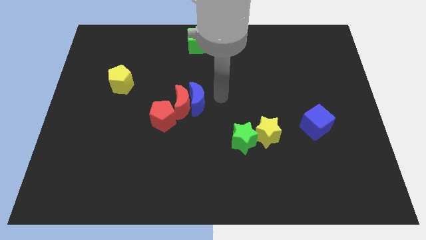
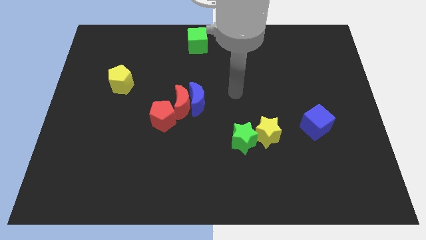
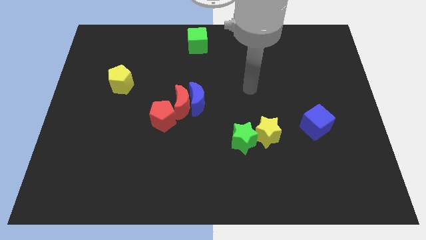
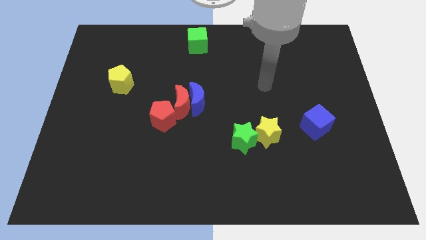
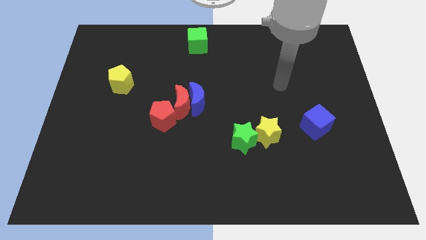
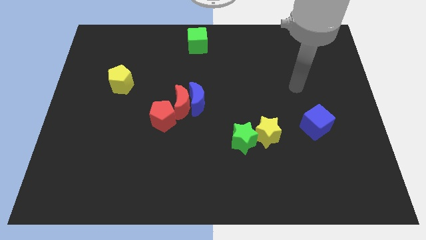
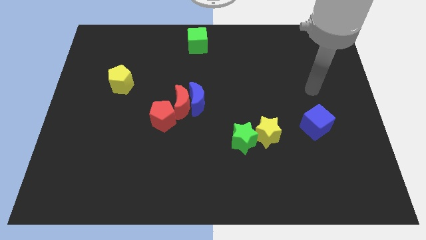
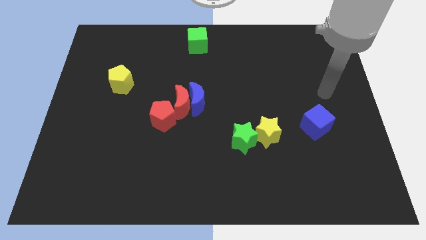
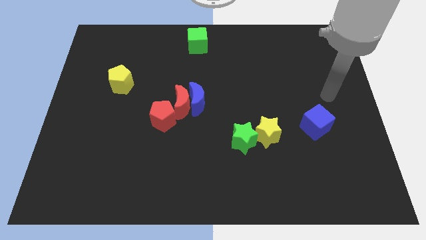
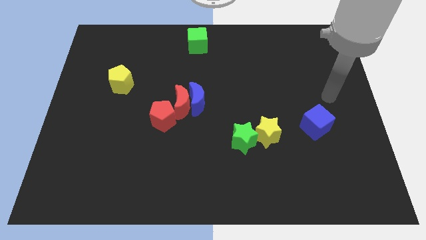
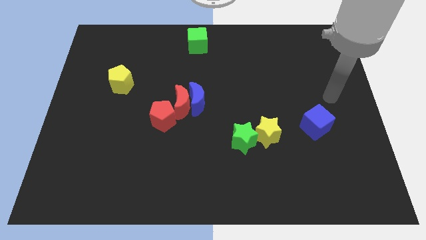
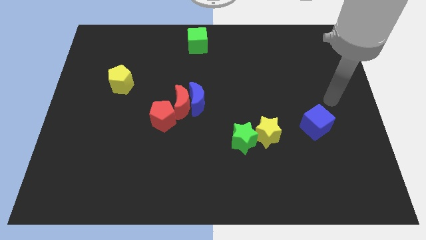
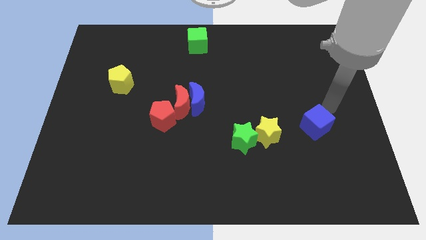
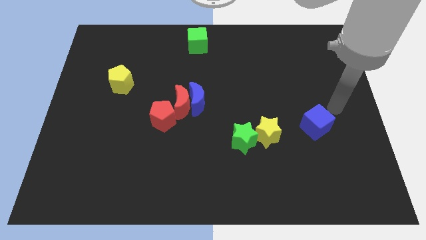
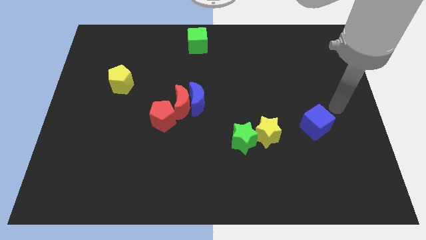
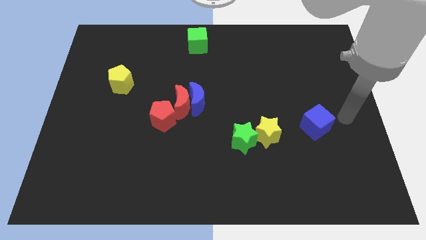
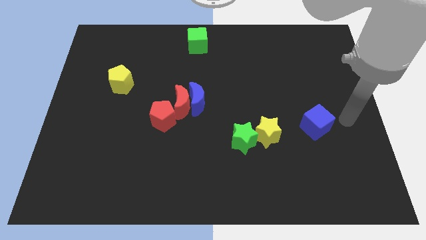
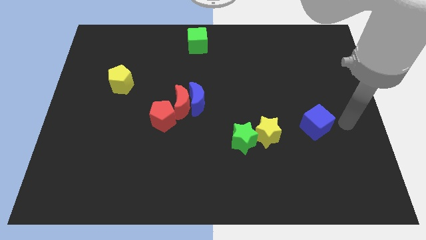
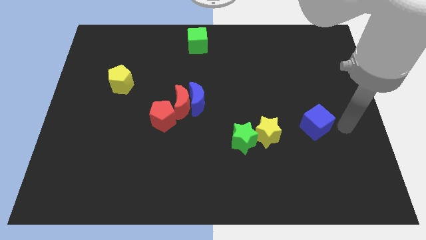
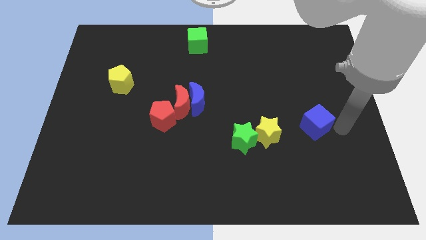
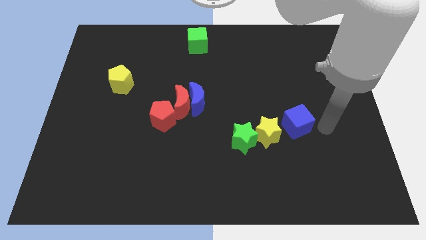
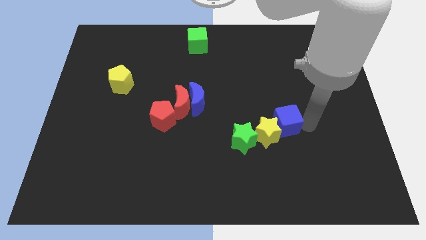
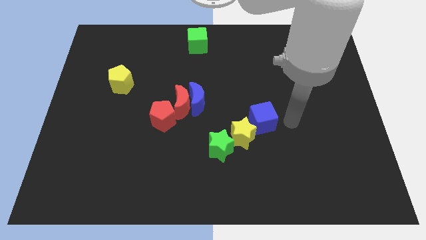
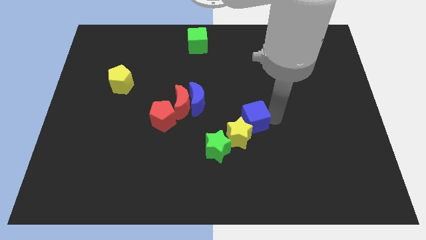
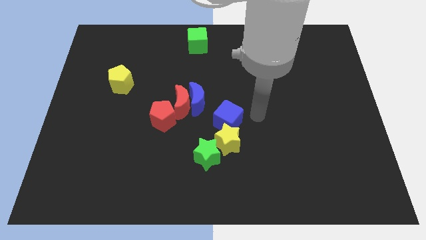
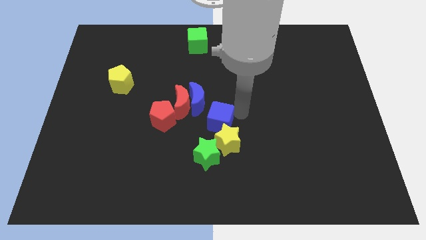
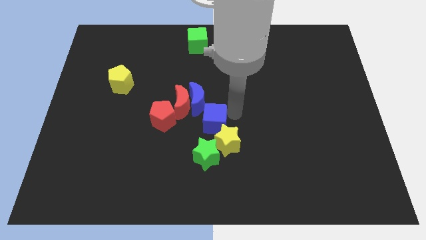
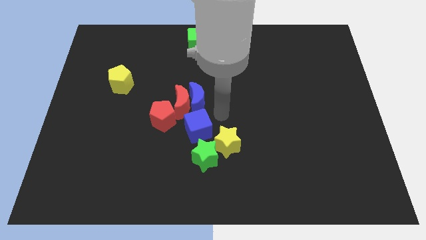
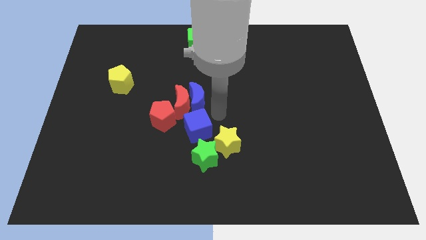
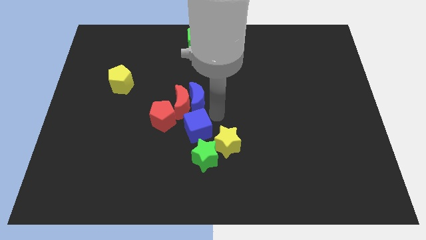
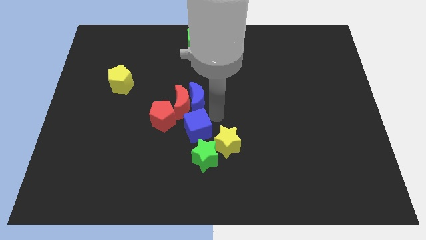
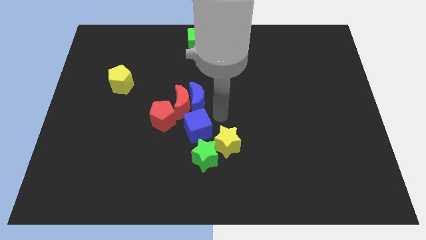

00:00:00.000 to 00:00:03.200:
place the blue cube below the blue crescent

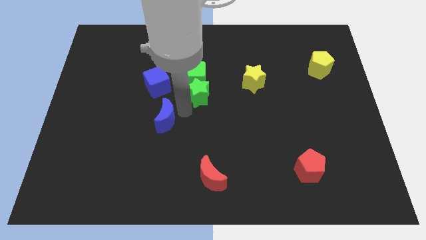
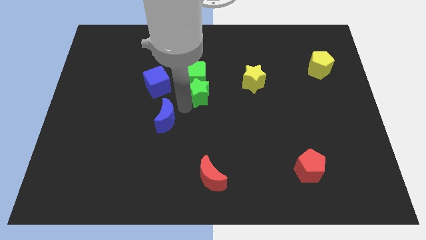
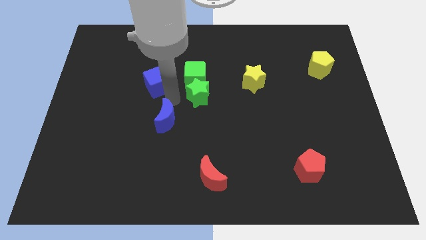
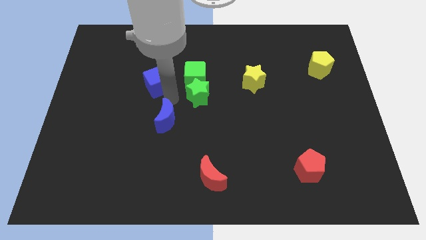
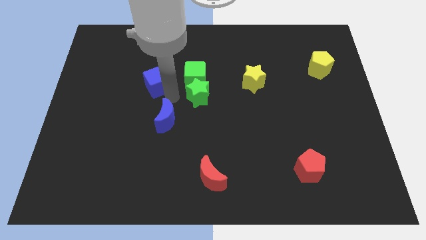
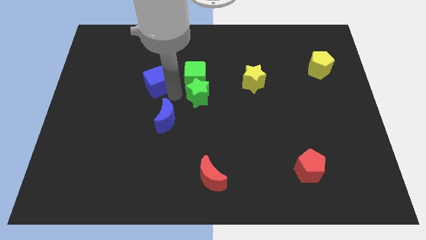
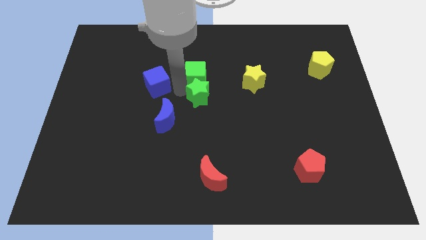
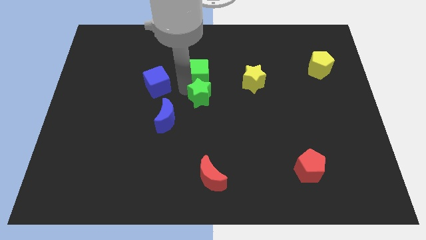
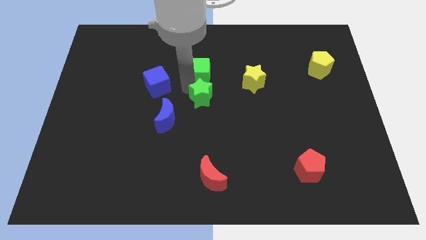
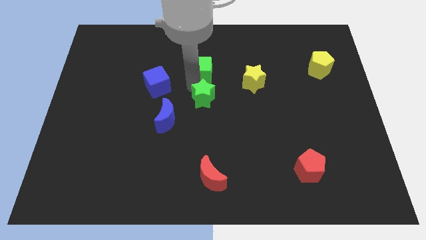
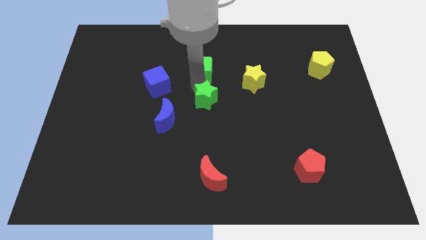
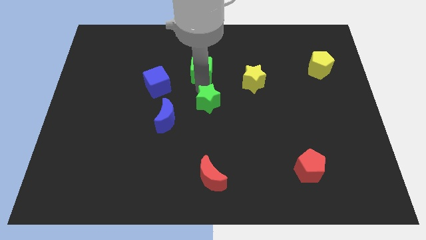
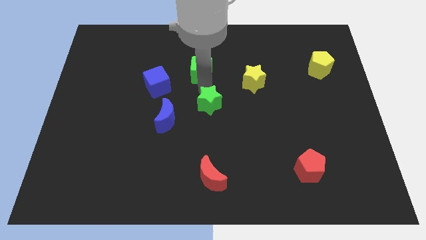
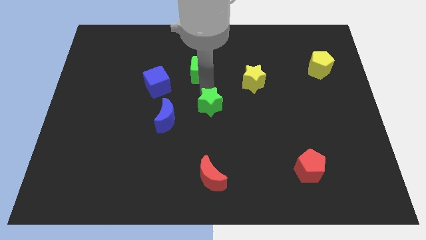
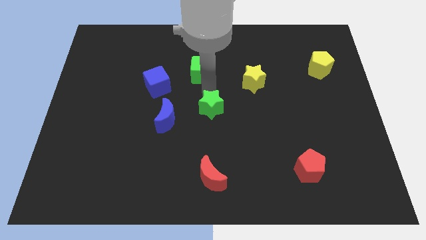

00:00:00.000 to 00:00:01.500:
separate green cube and green star

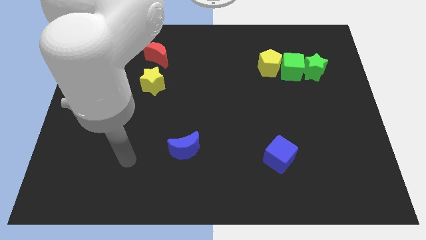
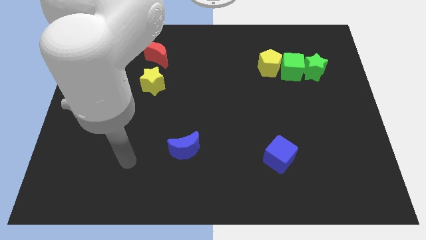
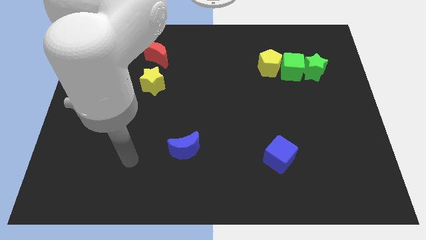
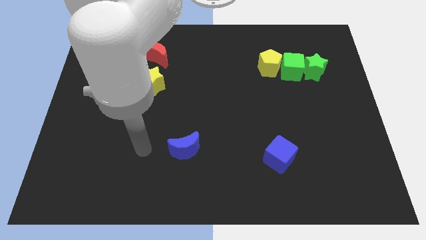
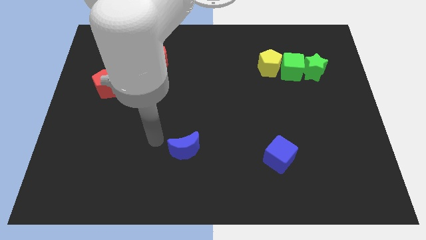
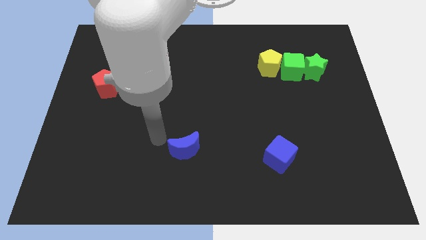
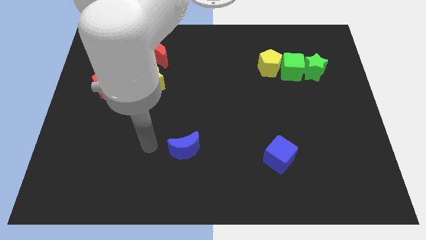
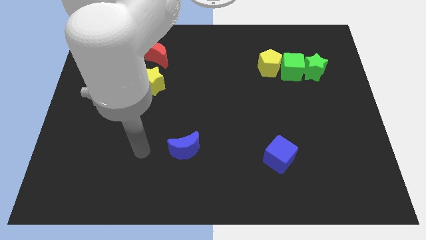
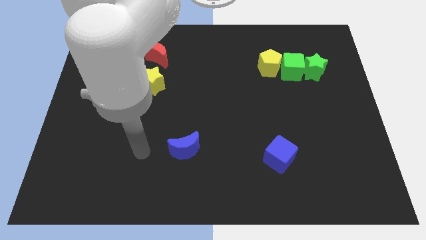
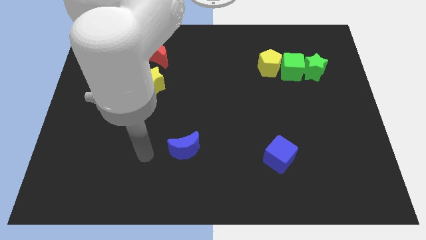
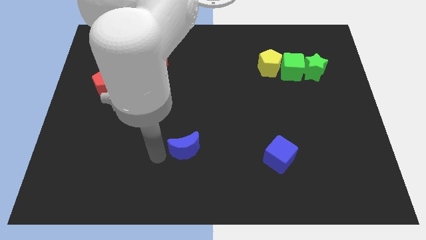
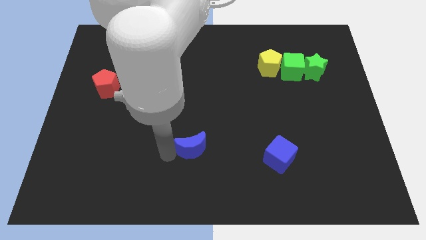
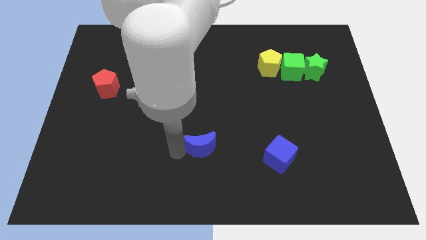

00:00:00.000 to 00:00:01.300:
push the blue crescent towards blue cube

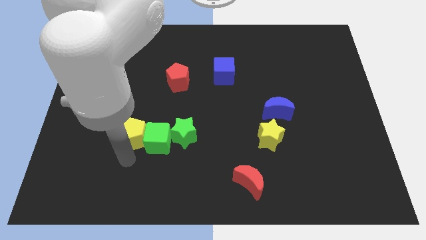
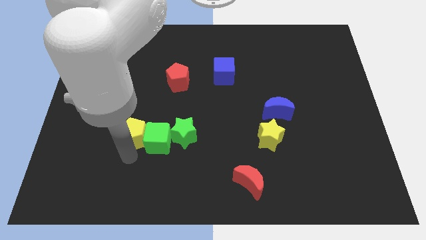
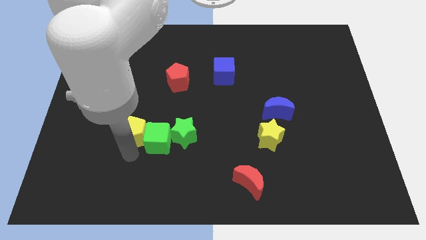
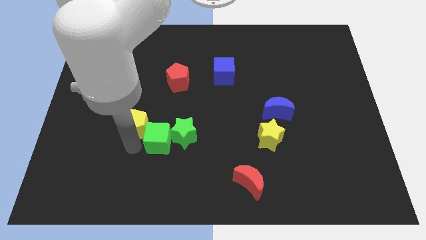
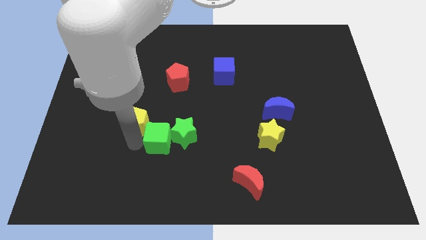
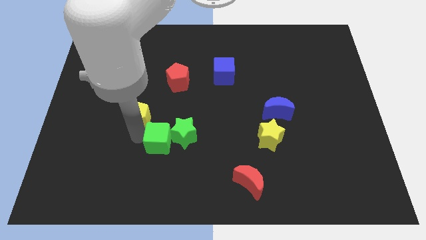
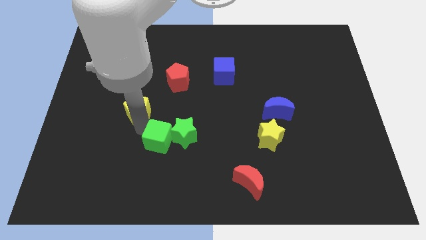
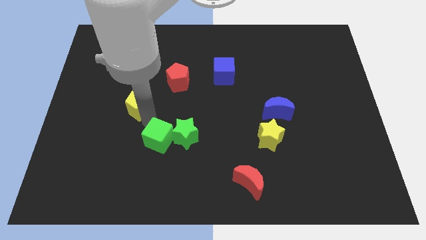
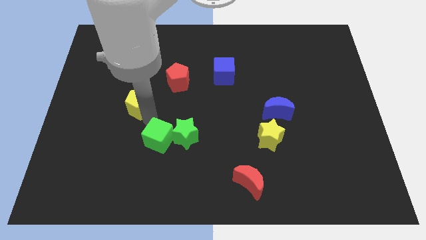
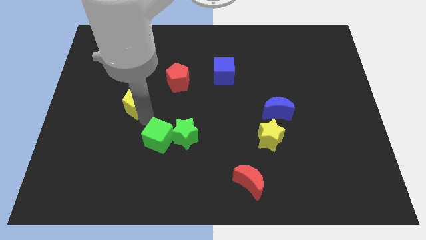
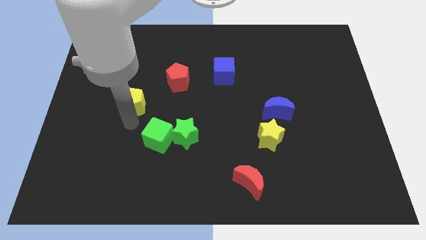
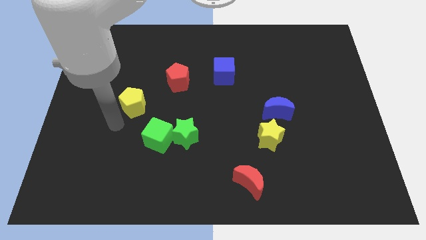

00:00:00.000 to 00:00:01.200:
drag yellow pentagon towards upward

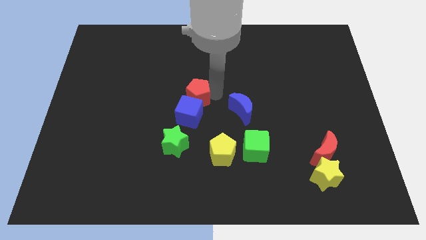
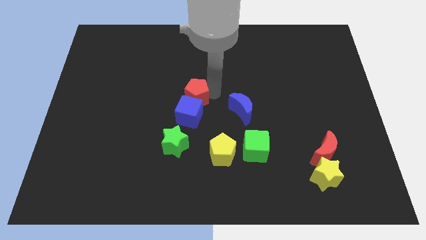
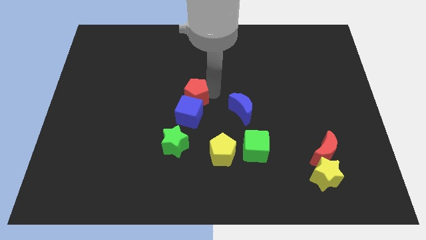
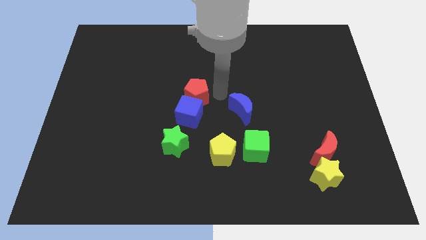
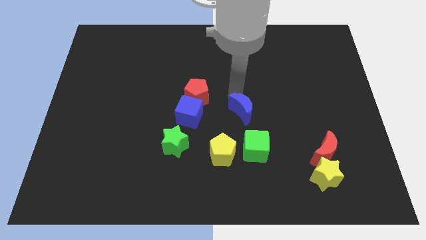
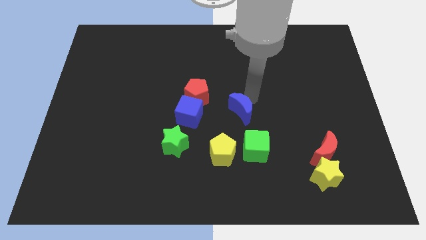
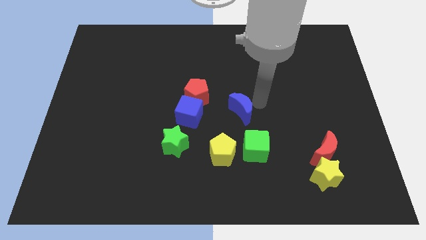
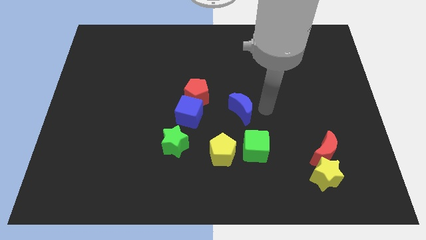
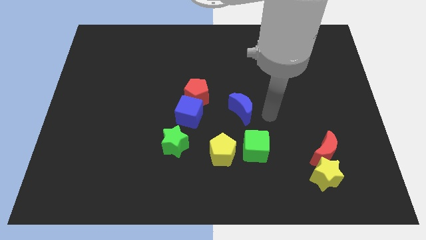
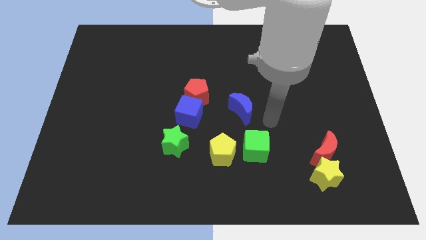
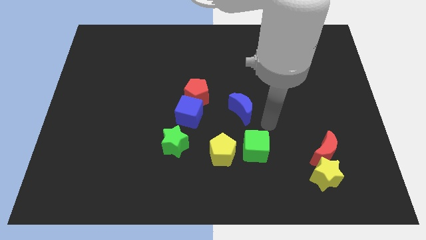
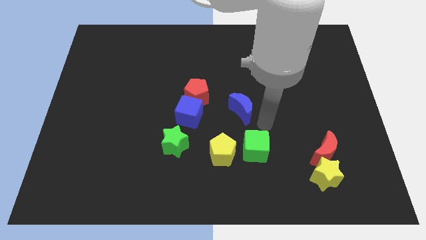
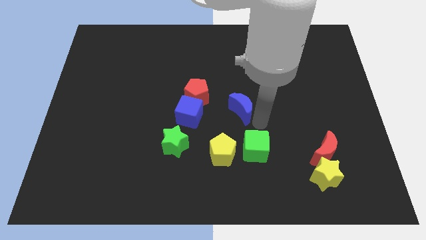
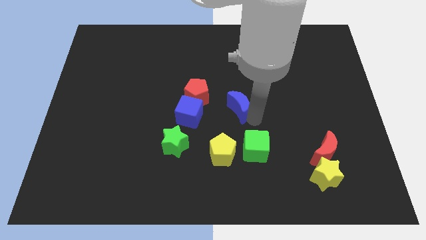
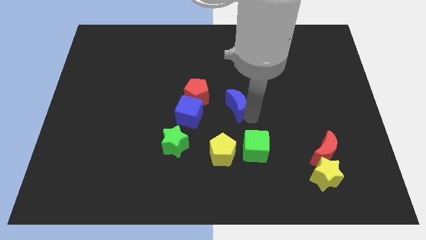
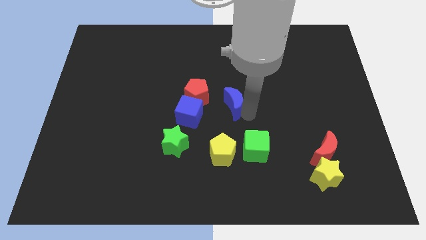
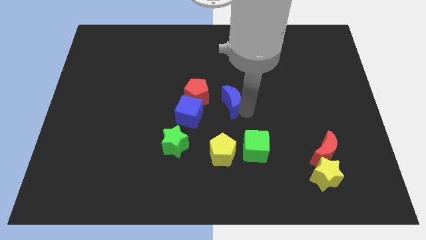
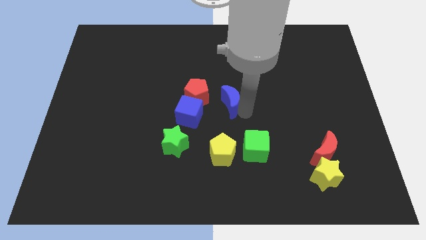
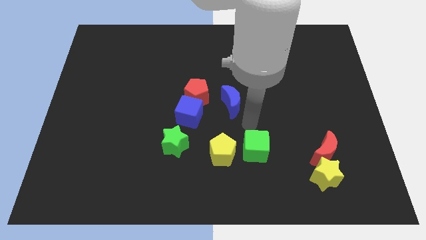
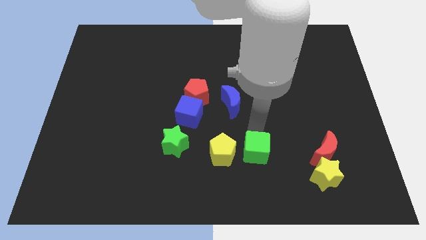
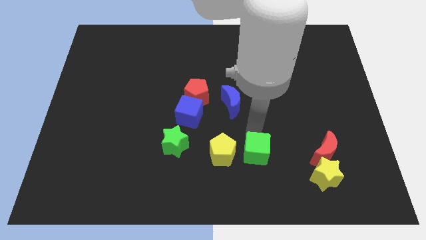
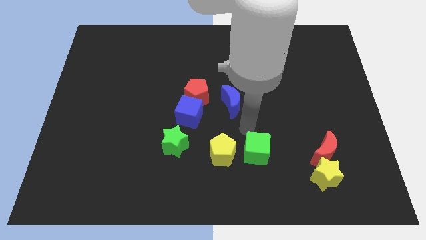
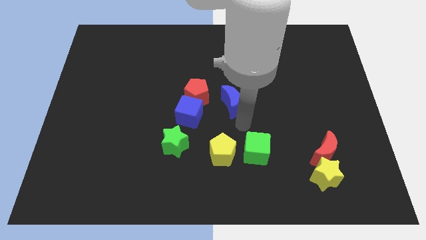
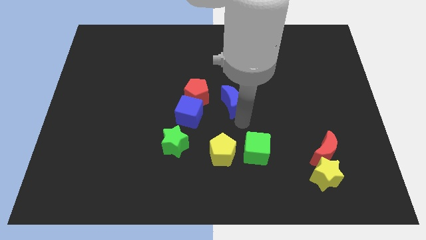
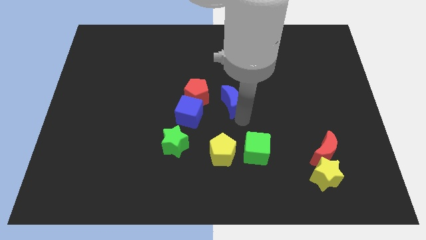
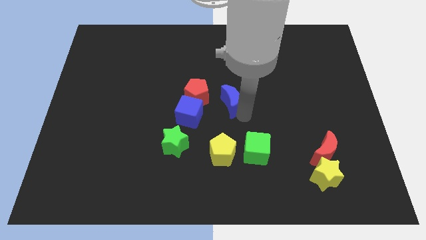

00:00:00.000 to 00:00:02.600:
place the blue moon to the bottom right of the red pentagon
